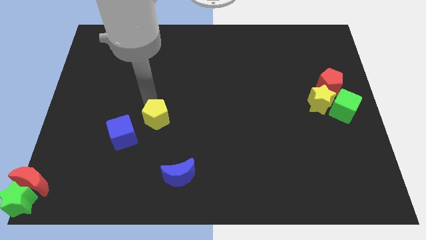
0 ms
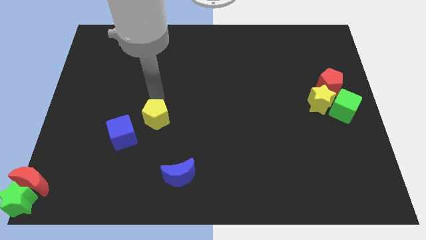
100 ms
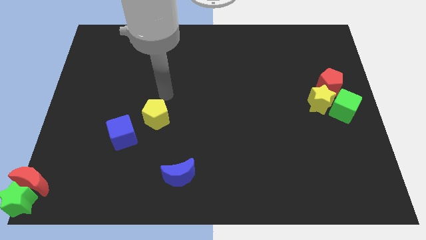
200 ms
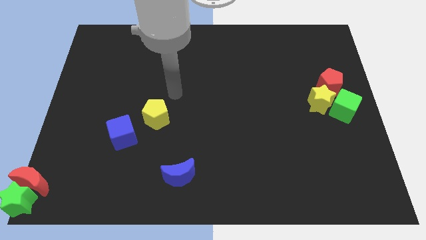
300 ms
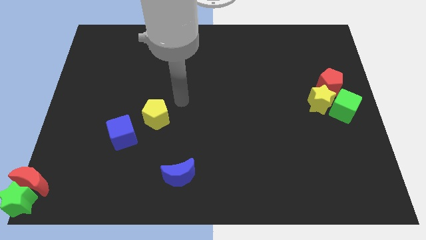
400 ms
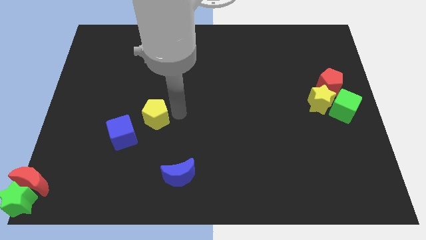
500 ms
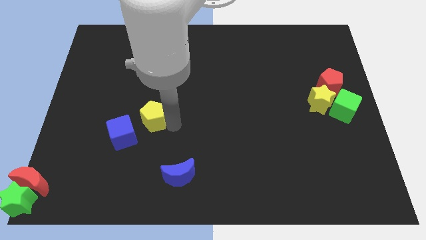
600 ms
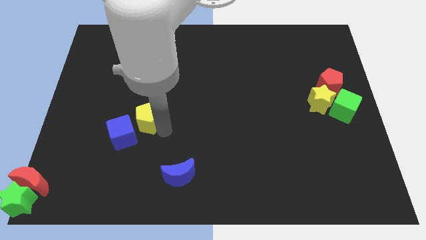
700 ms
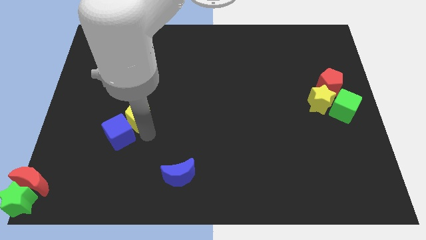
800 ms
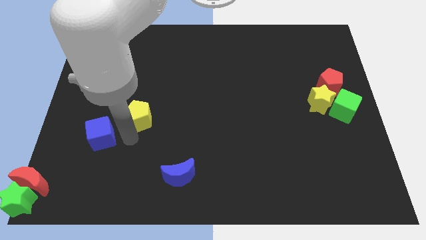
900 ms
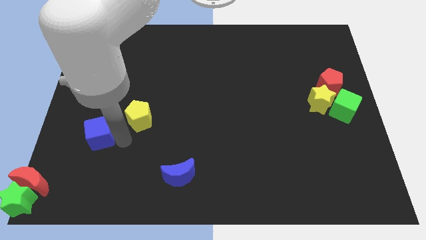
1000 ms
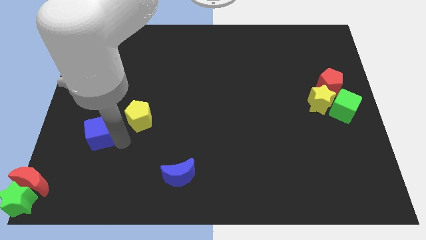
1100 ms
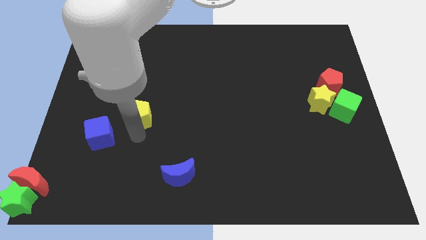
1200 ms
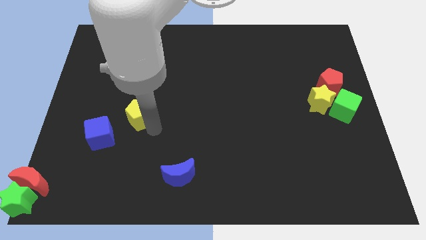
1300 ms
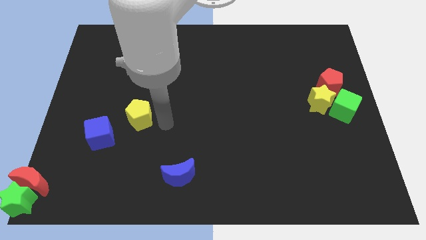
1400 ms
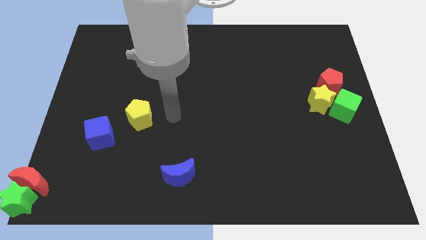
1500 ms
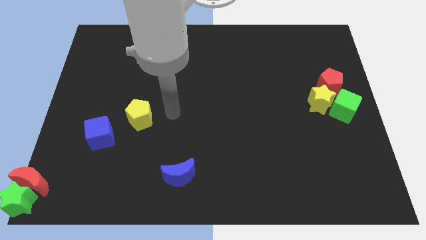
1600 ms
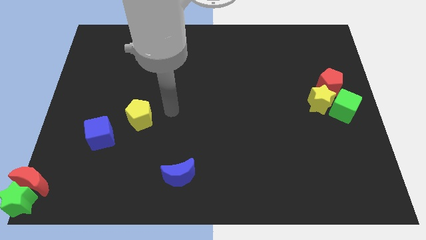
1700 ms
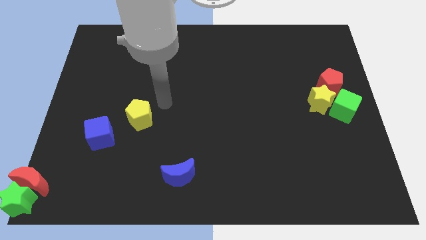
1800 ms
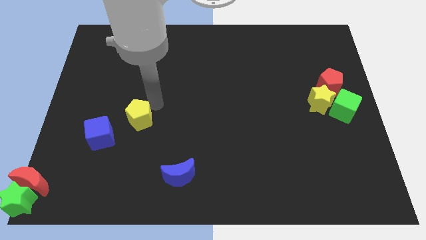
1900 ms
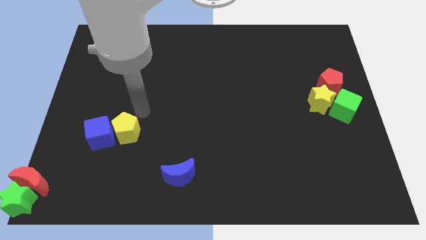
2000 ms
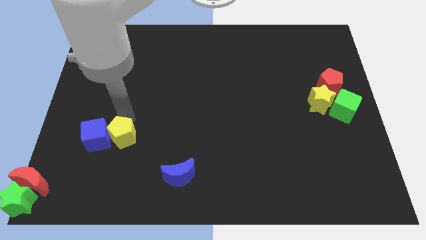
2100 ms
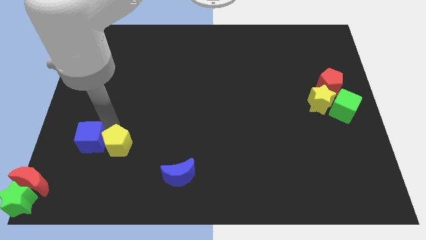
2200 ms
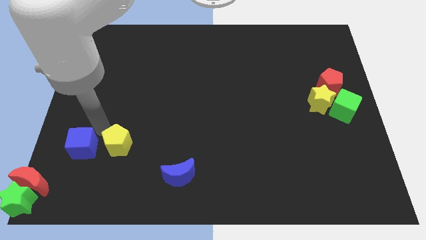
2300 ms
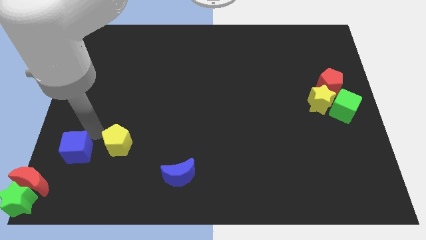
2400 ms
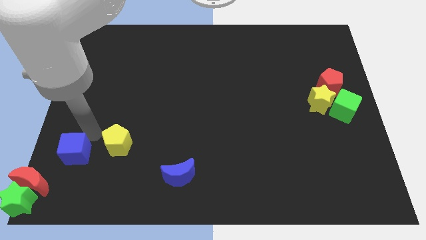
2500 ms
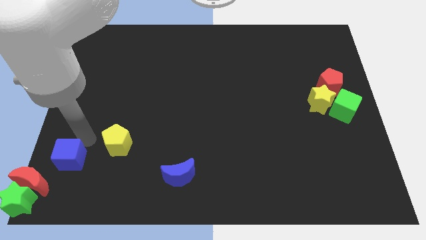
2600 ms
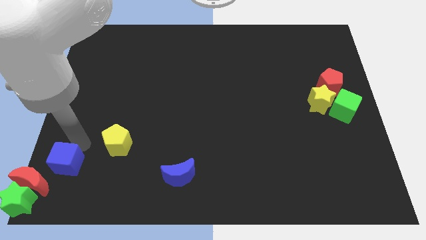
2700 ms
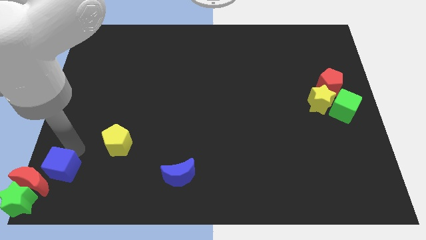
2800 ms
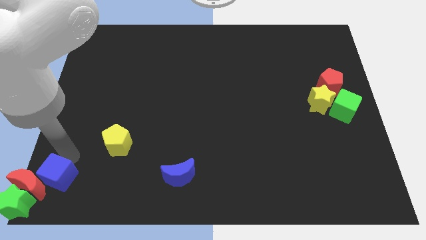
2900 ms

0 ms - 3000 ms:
move the blue cube with the yellow pentagon

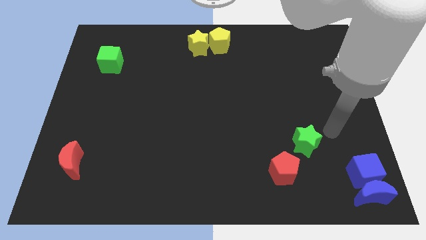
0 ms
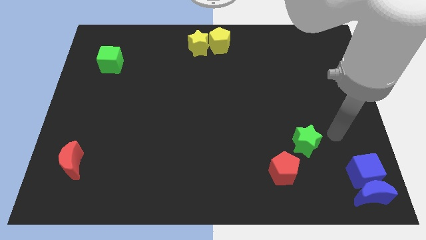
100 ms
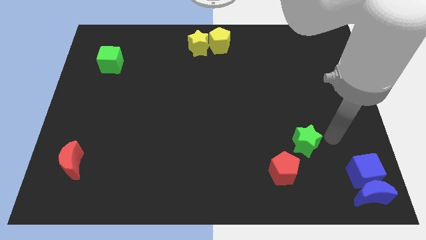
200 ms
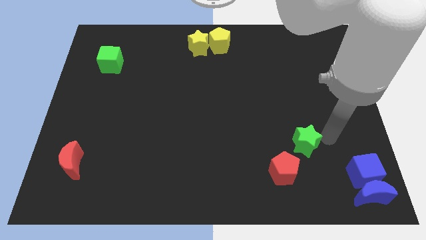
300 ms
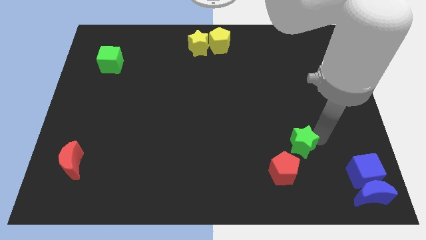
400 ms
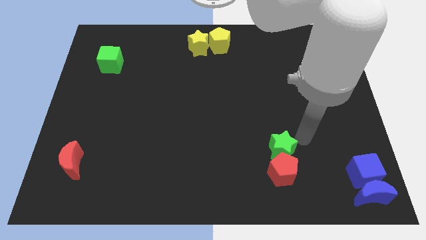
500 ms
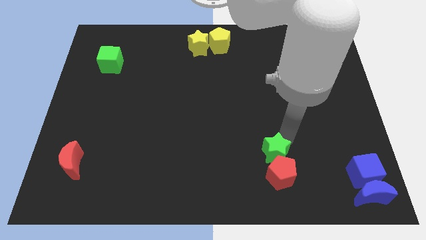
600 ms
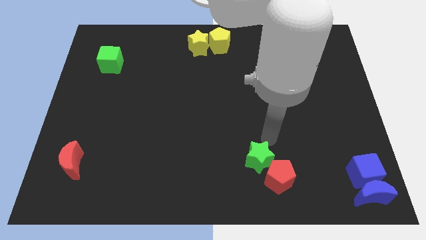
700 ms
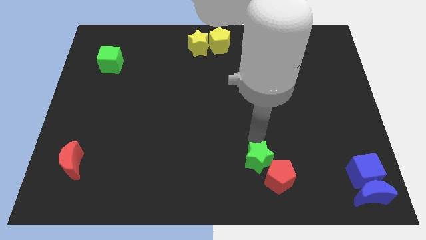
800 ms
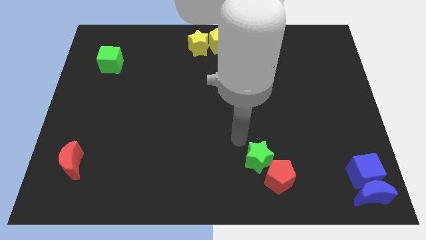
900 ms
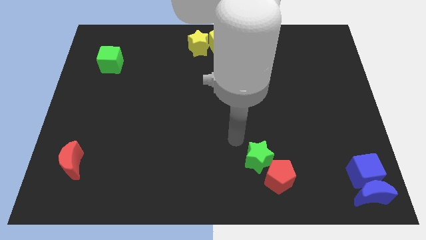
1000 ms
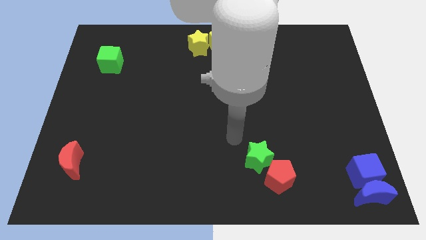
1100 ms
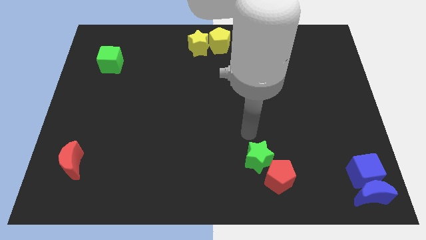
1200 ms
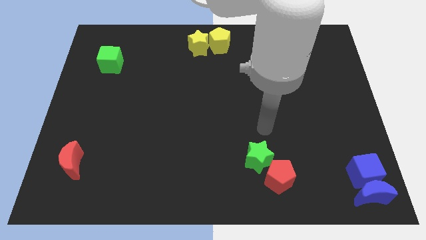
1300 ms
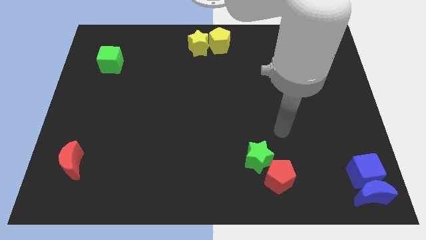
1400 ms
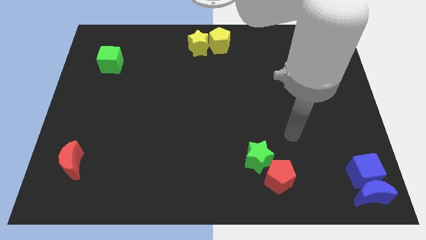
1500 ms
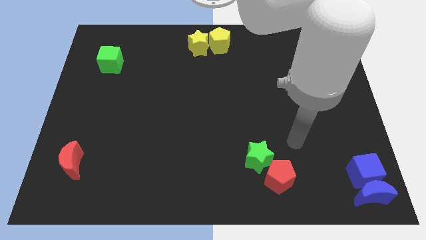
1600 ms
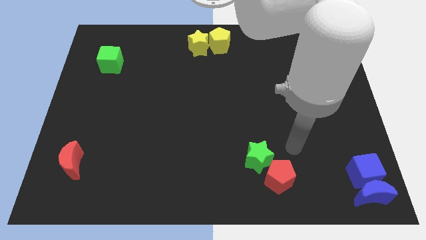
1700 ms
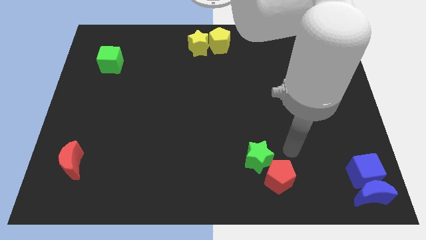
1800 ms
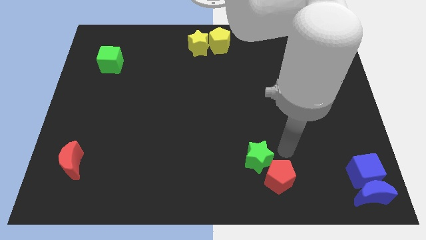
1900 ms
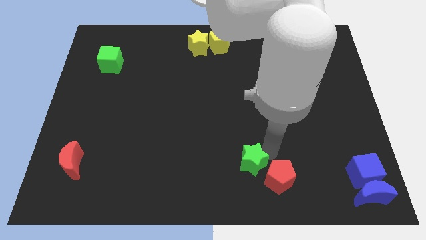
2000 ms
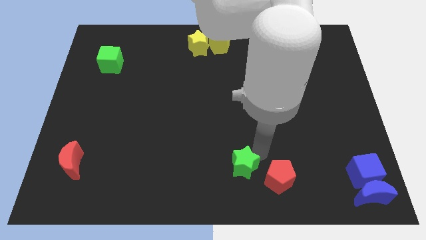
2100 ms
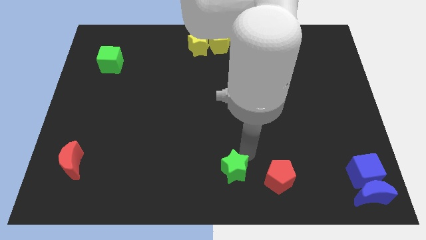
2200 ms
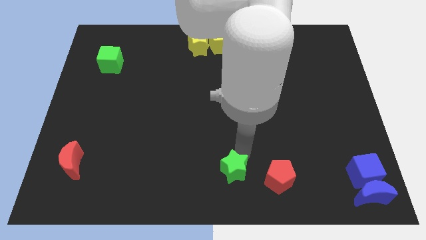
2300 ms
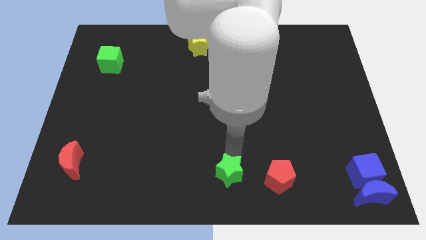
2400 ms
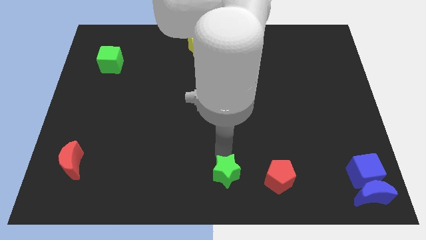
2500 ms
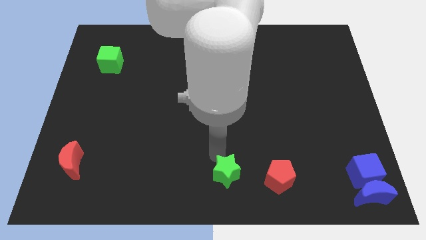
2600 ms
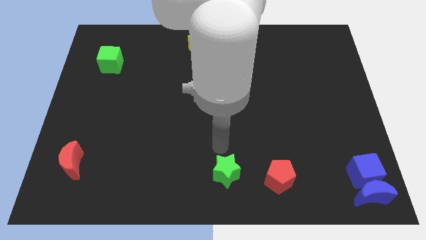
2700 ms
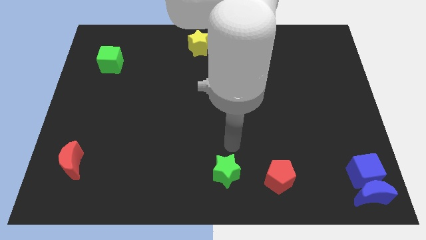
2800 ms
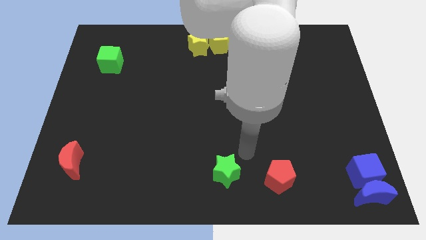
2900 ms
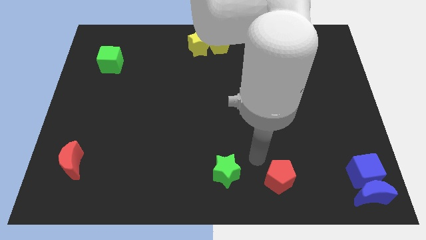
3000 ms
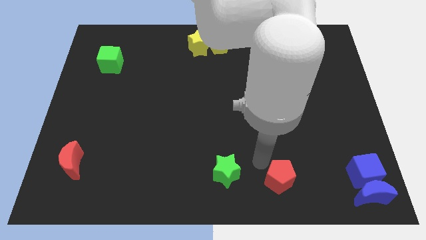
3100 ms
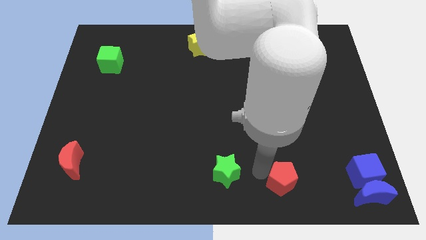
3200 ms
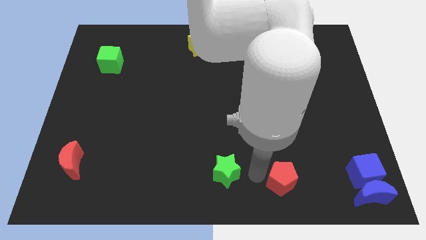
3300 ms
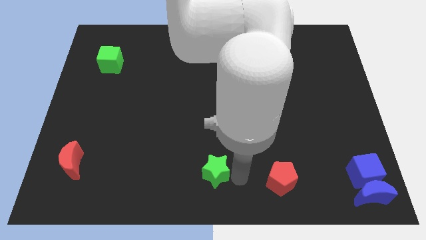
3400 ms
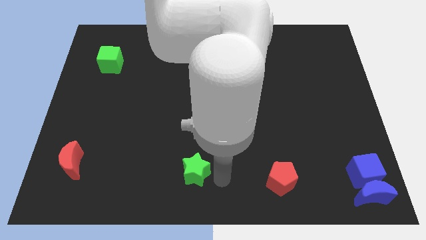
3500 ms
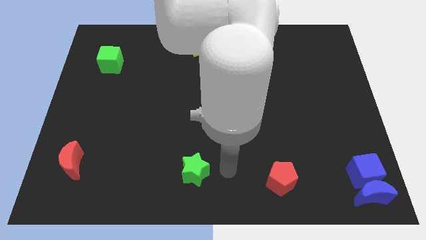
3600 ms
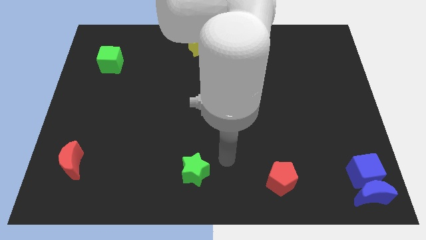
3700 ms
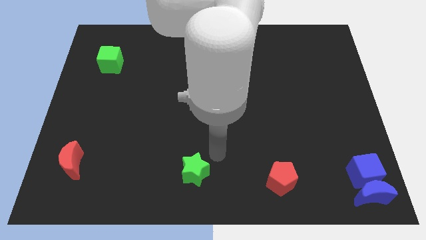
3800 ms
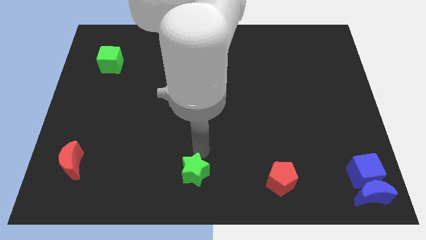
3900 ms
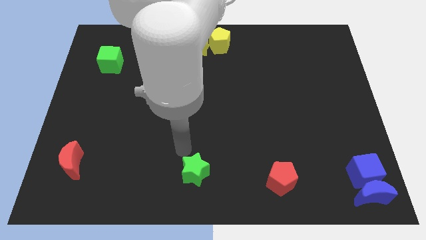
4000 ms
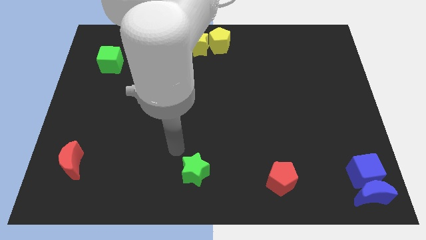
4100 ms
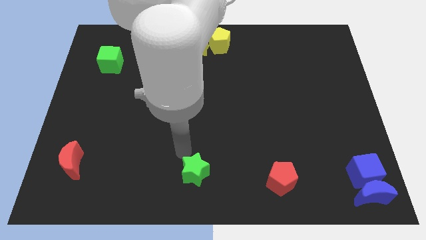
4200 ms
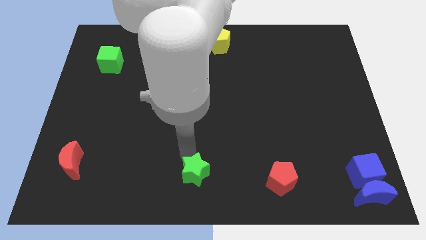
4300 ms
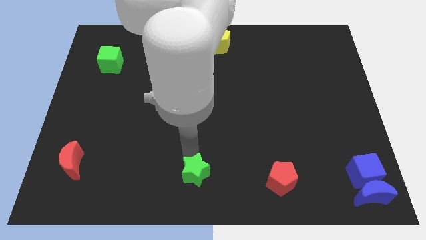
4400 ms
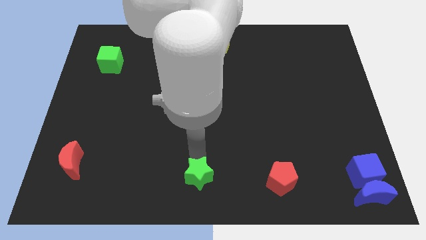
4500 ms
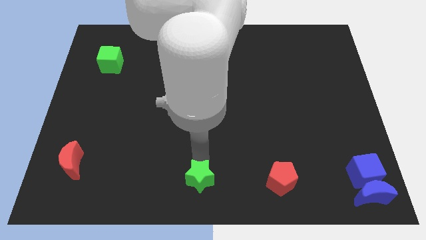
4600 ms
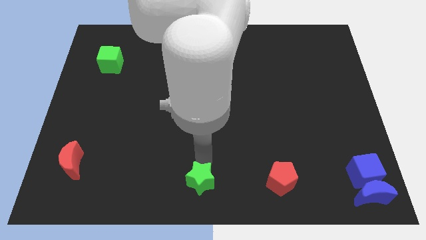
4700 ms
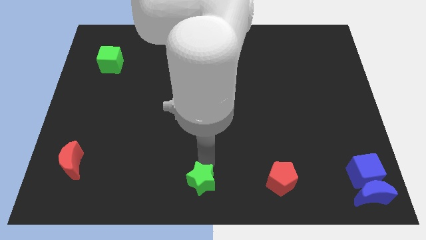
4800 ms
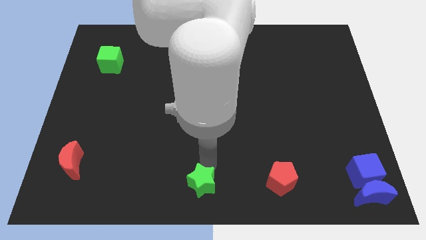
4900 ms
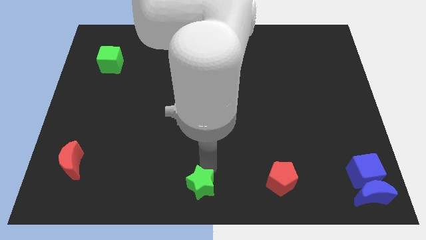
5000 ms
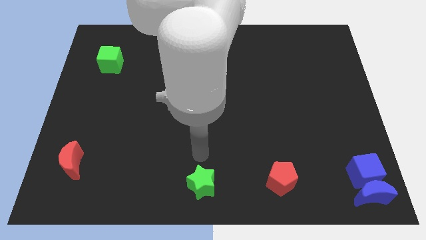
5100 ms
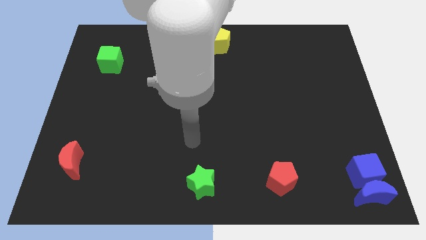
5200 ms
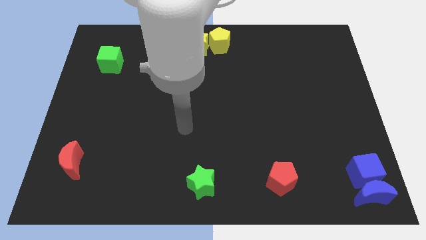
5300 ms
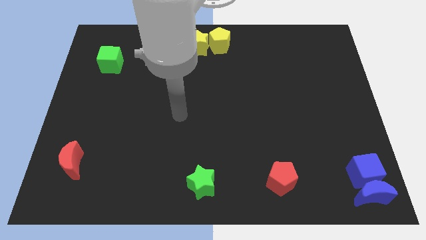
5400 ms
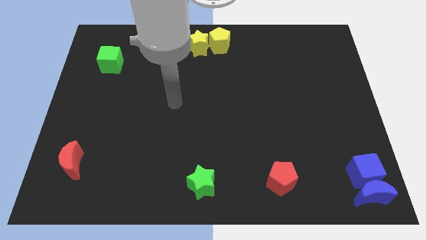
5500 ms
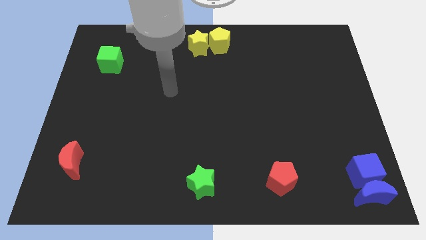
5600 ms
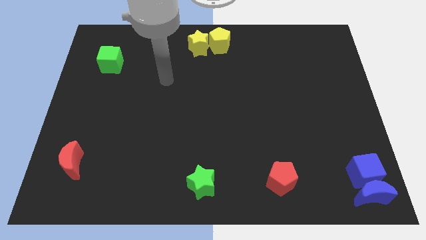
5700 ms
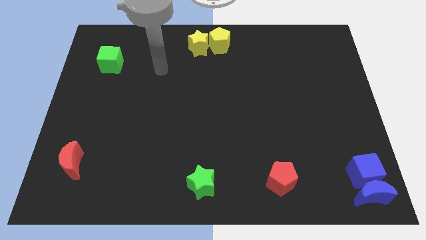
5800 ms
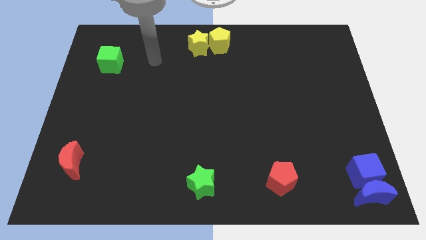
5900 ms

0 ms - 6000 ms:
move green star to the bottom center
